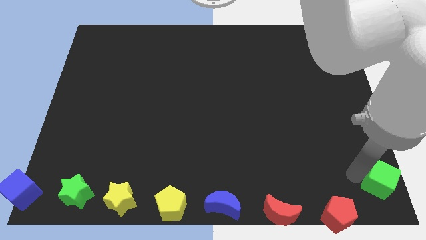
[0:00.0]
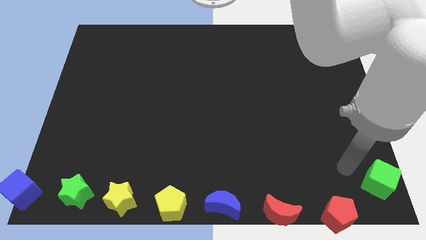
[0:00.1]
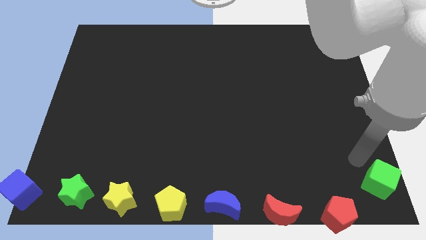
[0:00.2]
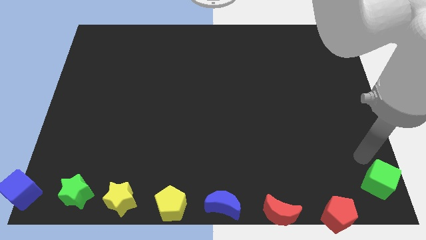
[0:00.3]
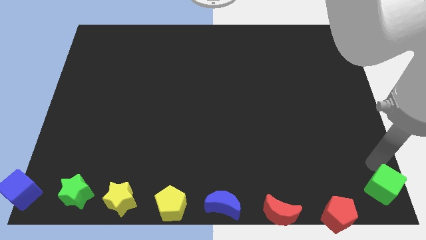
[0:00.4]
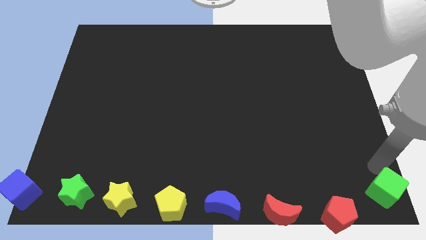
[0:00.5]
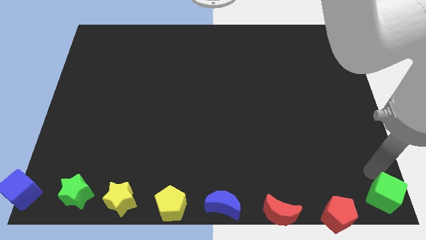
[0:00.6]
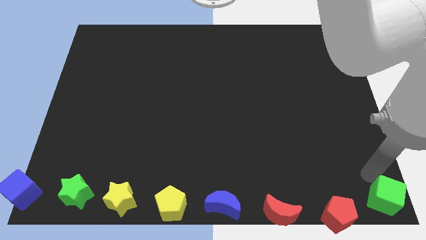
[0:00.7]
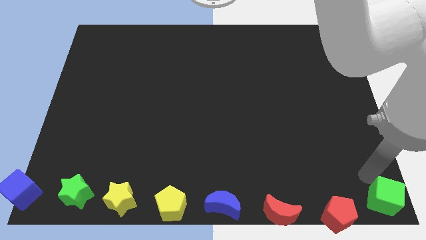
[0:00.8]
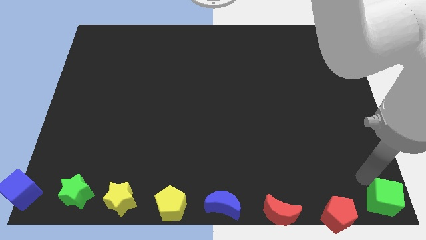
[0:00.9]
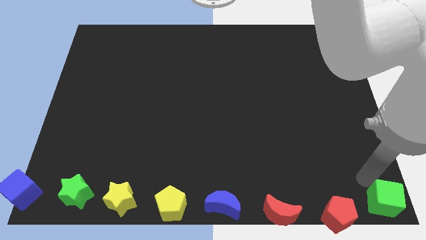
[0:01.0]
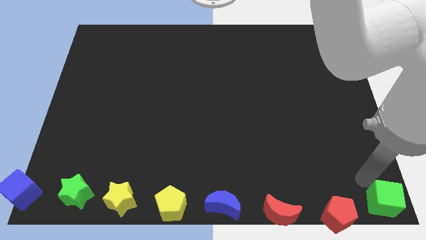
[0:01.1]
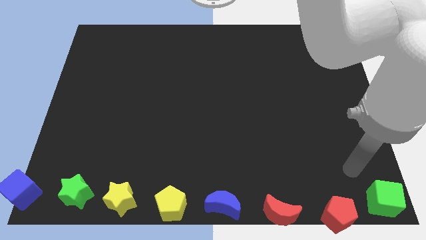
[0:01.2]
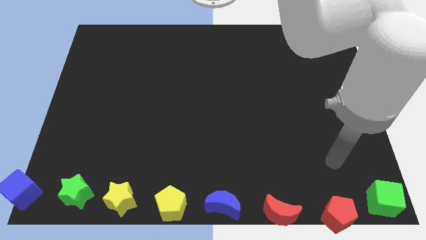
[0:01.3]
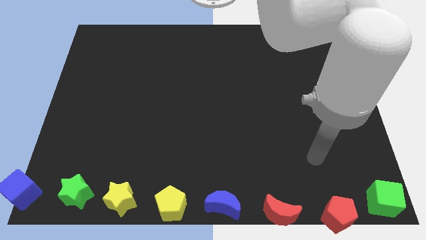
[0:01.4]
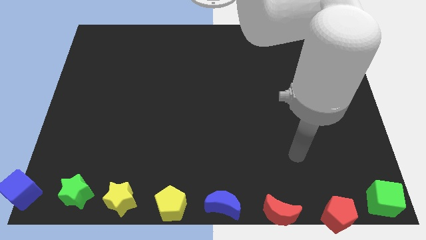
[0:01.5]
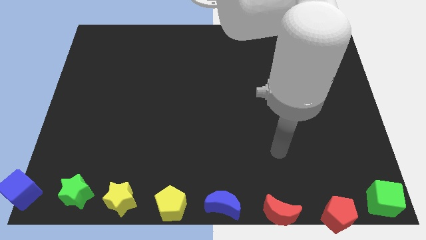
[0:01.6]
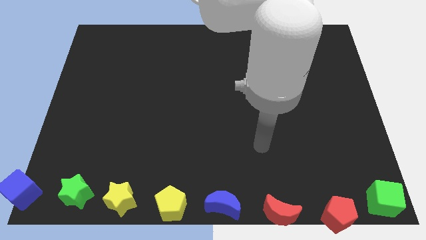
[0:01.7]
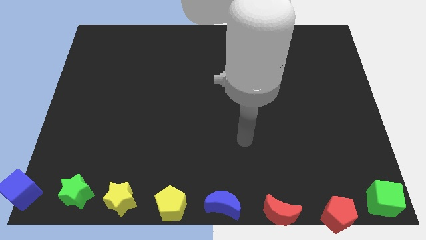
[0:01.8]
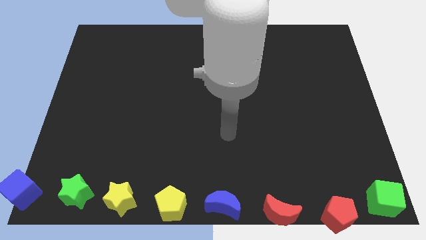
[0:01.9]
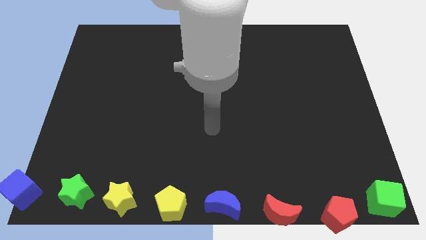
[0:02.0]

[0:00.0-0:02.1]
slide green cube to the bottom right corner

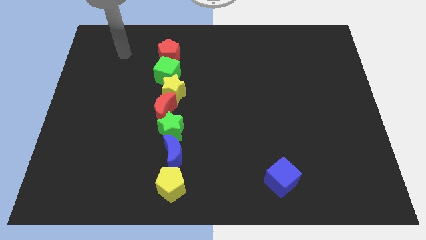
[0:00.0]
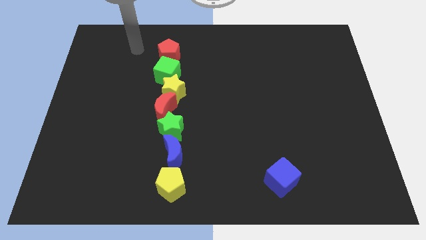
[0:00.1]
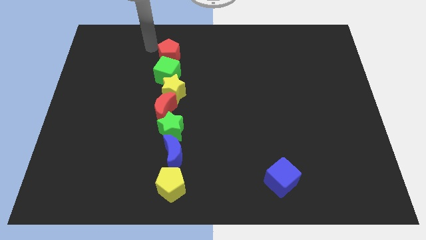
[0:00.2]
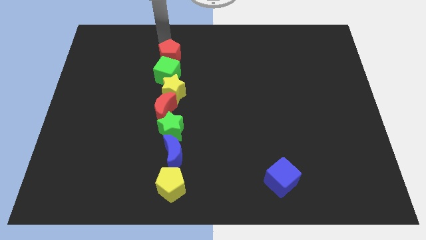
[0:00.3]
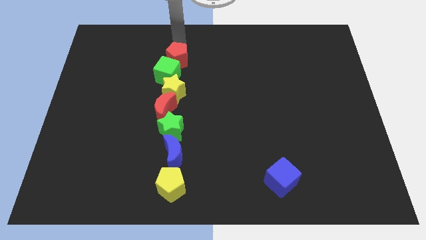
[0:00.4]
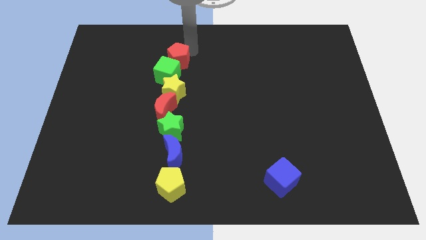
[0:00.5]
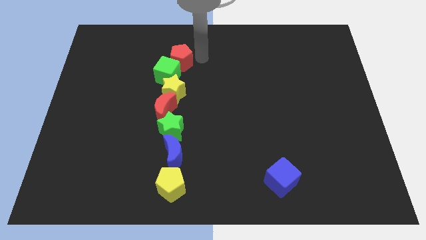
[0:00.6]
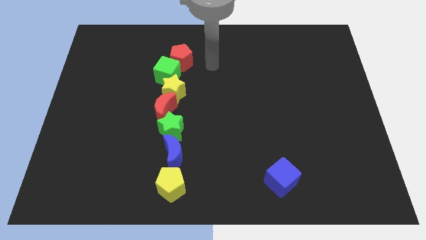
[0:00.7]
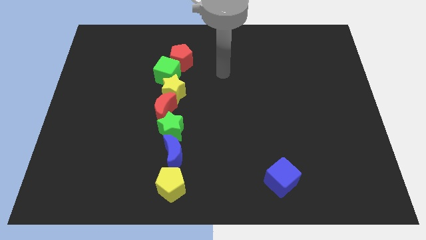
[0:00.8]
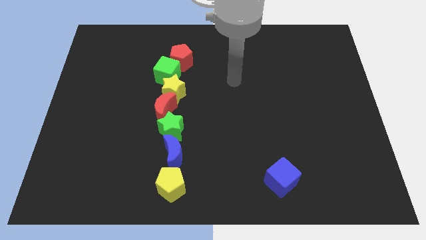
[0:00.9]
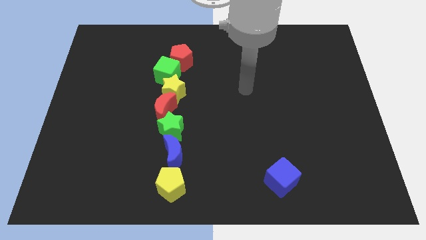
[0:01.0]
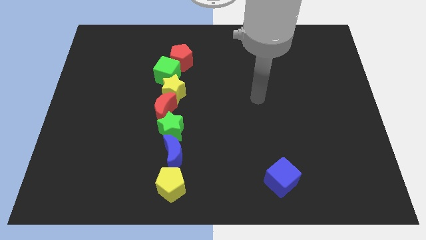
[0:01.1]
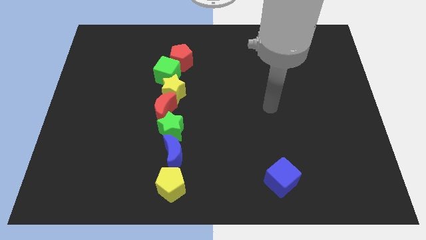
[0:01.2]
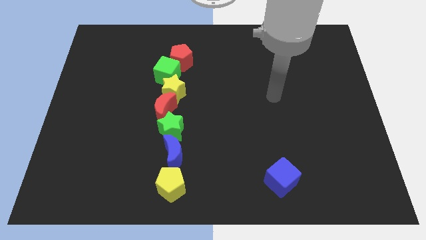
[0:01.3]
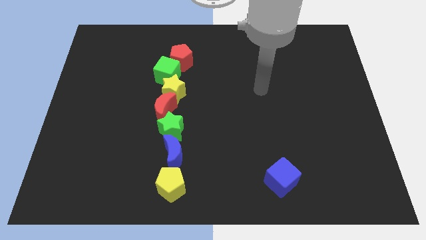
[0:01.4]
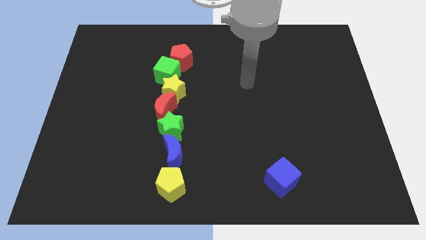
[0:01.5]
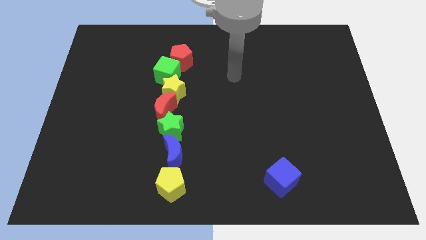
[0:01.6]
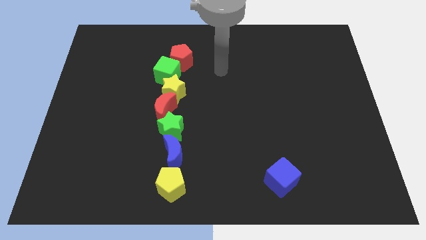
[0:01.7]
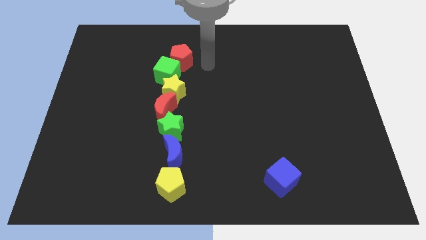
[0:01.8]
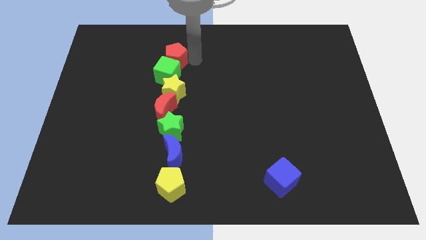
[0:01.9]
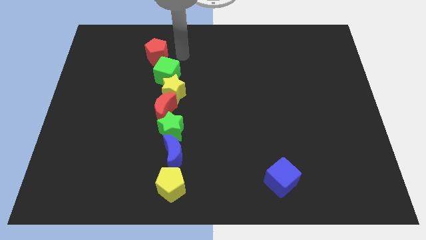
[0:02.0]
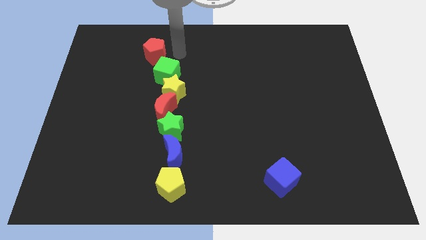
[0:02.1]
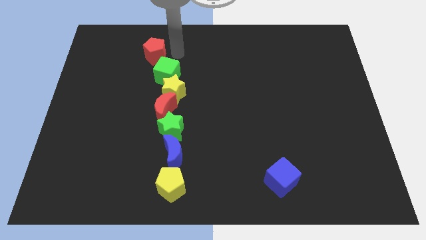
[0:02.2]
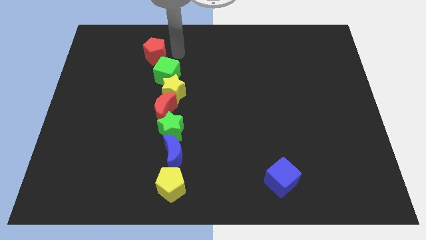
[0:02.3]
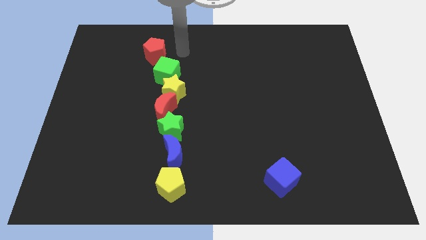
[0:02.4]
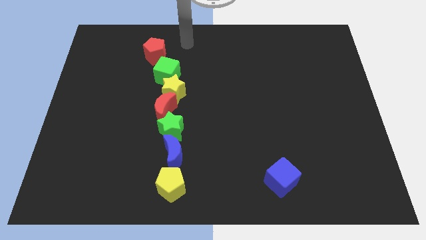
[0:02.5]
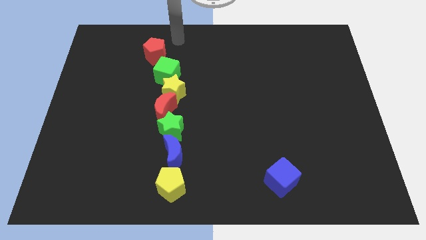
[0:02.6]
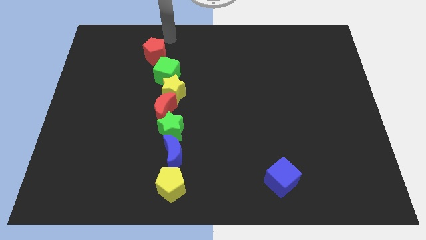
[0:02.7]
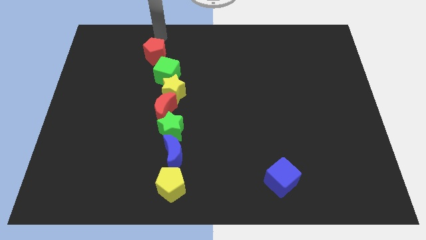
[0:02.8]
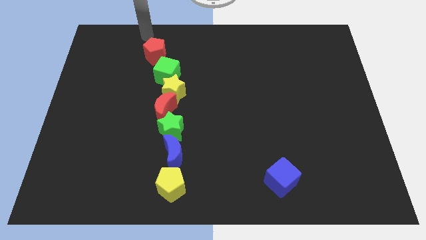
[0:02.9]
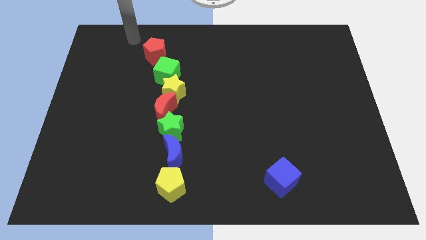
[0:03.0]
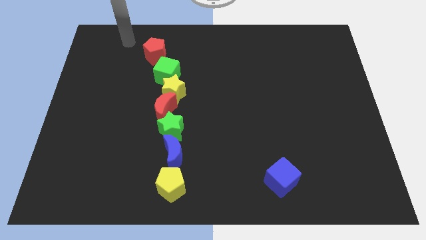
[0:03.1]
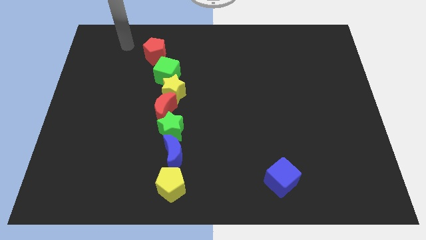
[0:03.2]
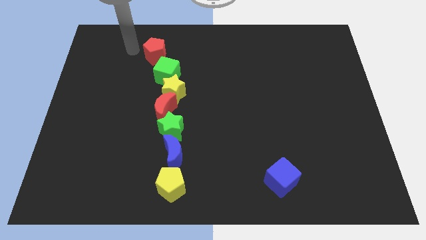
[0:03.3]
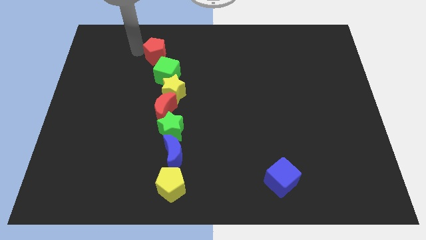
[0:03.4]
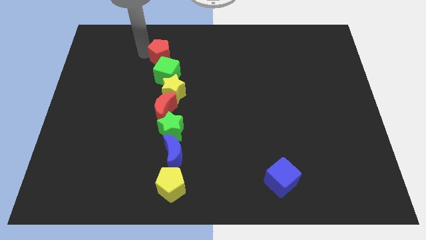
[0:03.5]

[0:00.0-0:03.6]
push the red pentagon slightly on the left side of the board

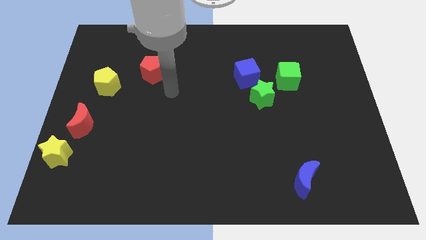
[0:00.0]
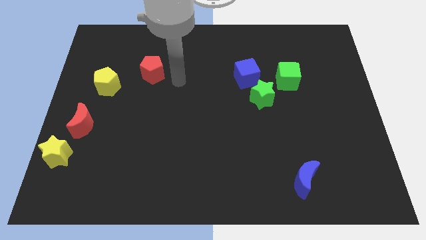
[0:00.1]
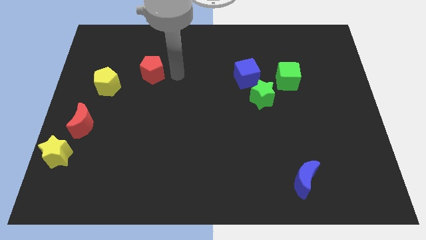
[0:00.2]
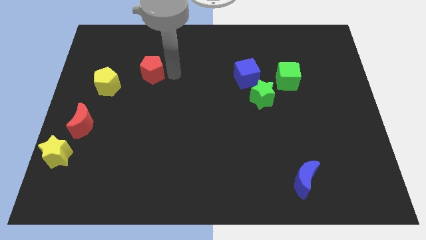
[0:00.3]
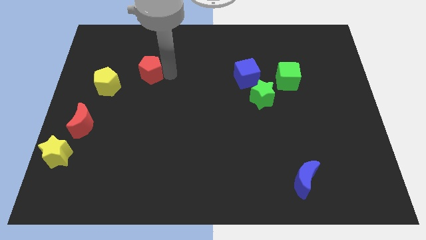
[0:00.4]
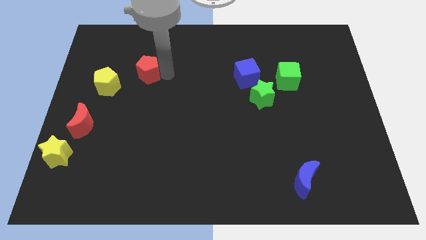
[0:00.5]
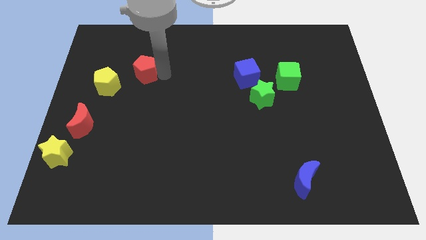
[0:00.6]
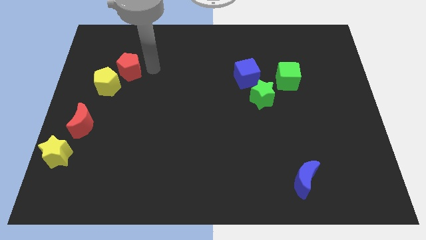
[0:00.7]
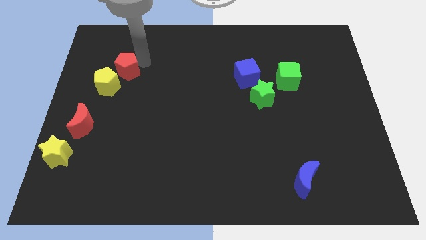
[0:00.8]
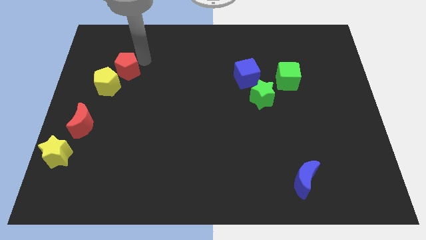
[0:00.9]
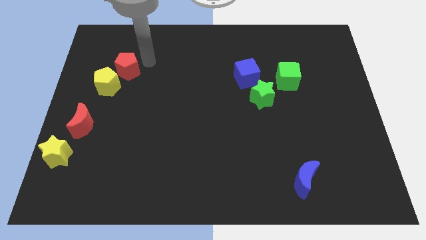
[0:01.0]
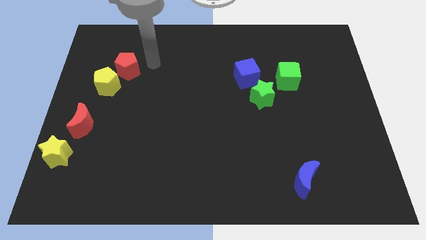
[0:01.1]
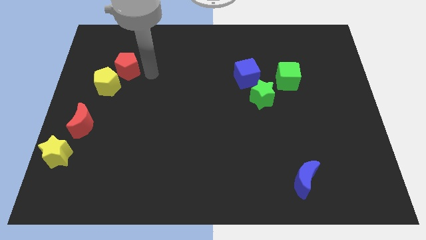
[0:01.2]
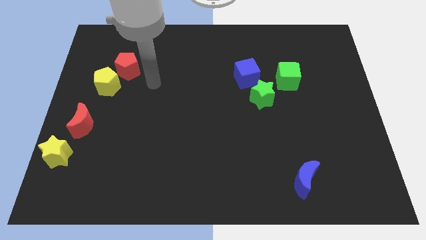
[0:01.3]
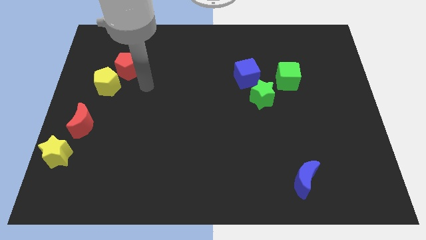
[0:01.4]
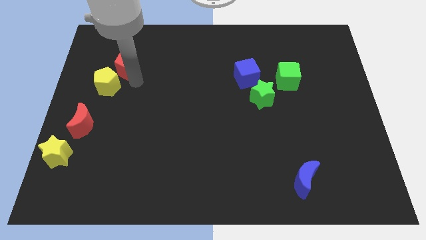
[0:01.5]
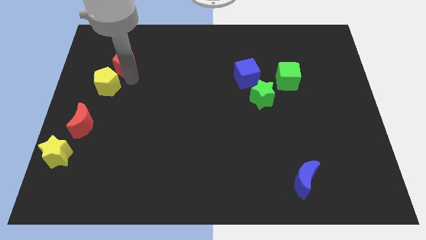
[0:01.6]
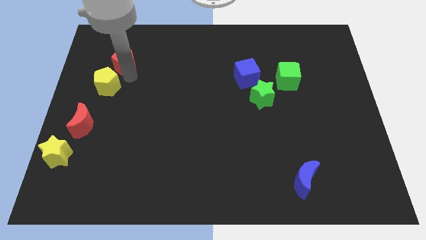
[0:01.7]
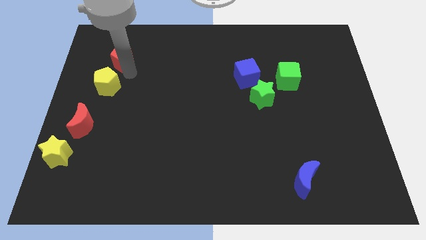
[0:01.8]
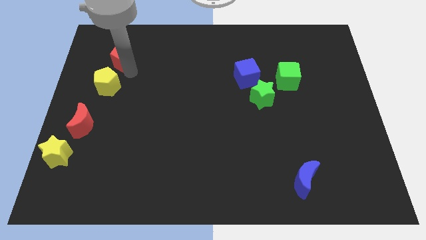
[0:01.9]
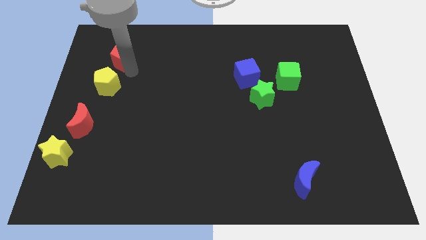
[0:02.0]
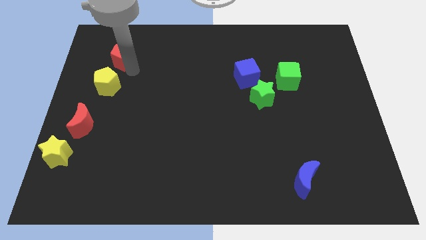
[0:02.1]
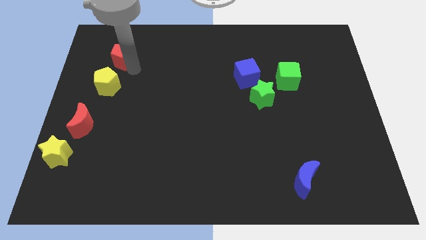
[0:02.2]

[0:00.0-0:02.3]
move the red pentagon to the top side of the yellow pentagon

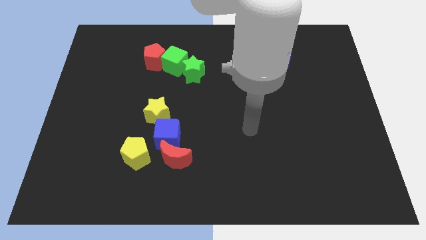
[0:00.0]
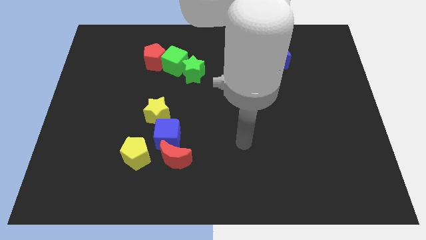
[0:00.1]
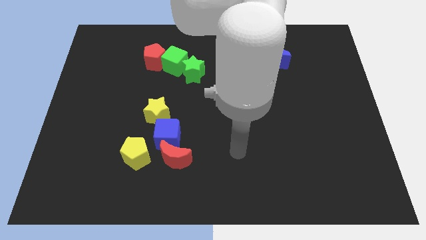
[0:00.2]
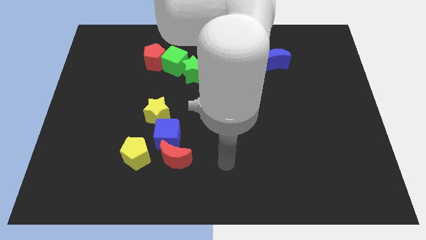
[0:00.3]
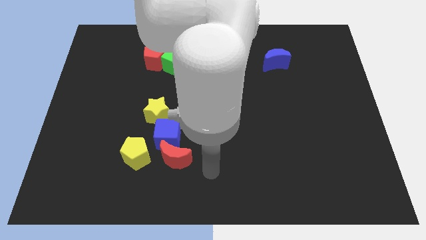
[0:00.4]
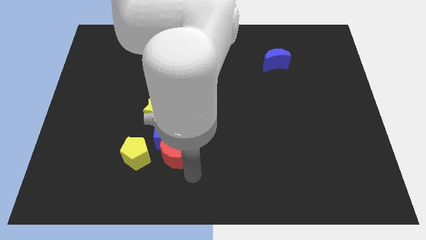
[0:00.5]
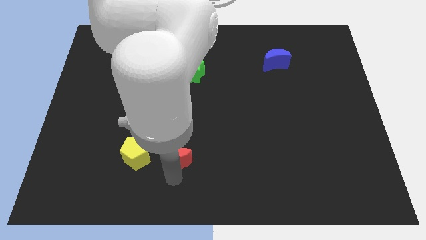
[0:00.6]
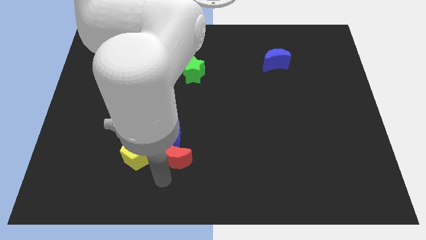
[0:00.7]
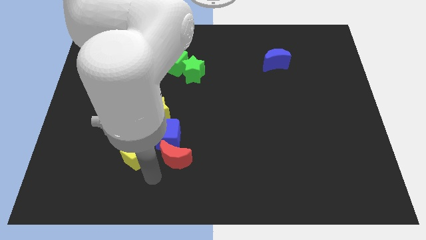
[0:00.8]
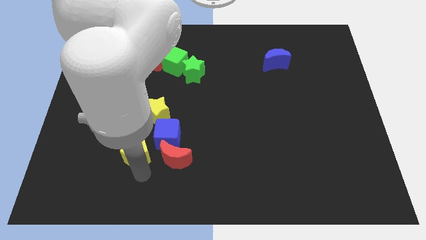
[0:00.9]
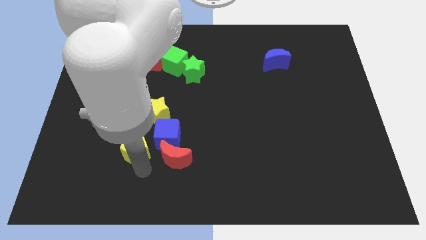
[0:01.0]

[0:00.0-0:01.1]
touch the bottom of yellow pentagon
